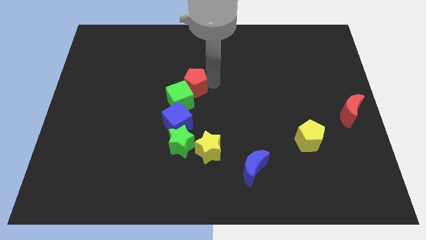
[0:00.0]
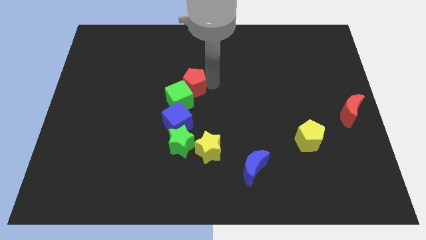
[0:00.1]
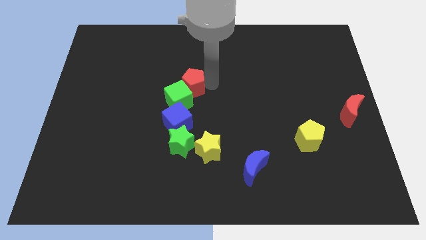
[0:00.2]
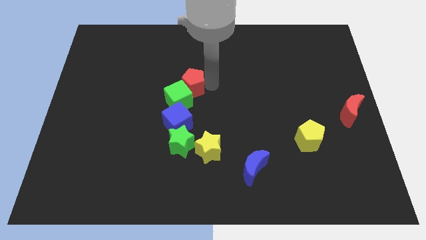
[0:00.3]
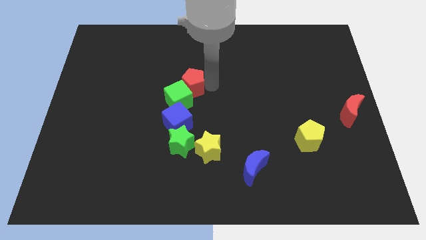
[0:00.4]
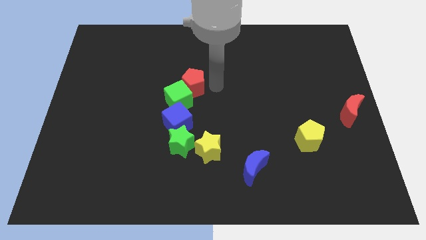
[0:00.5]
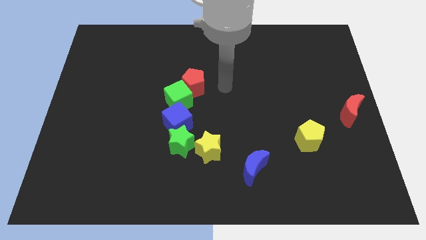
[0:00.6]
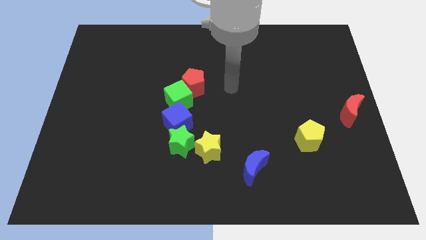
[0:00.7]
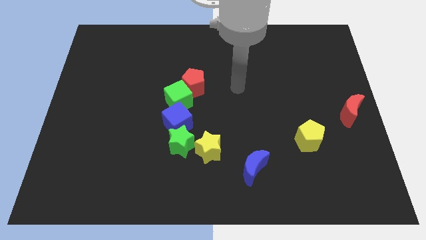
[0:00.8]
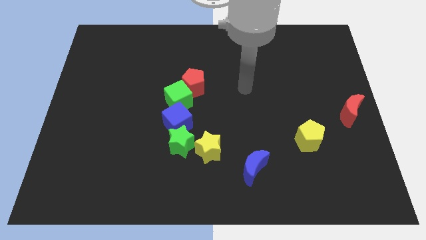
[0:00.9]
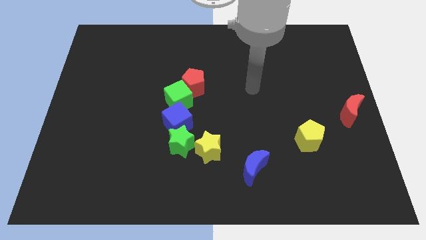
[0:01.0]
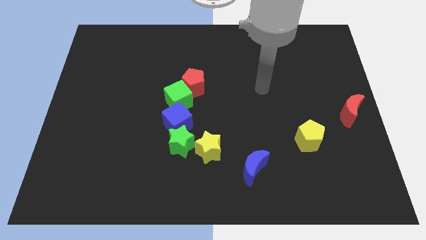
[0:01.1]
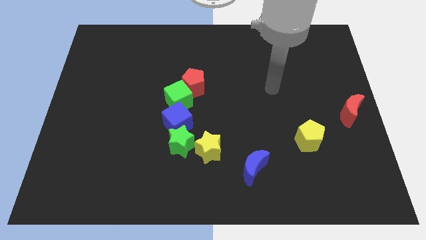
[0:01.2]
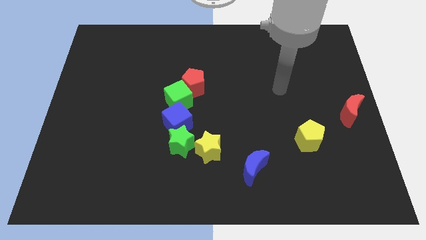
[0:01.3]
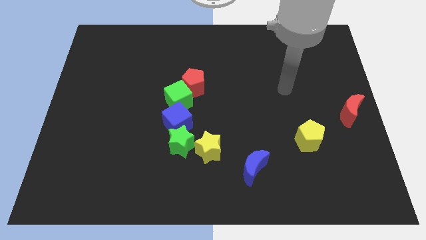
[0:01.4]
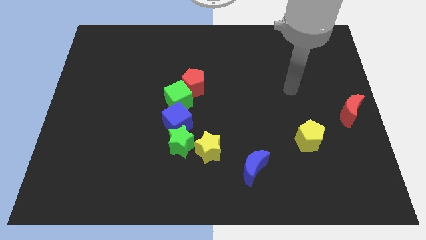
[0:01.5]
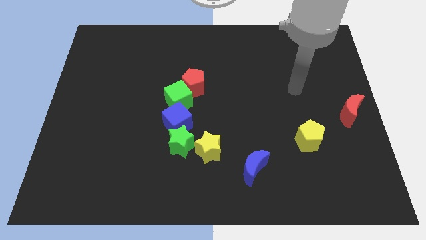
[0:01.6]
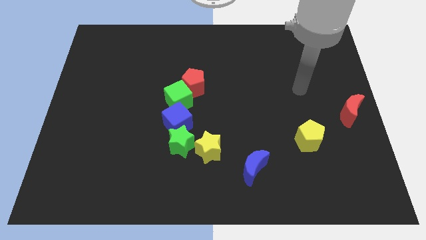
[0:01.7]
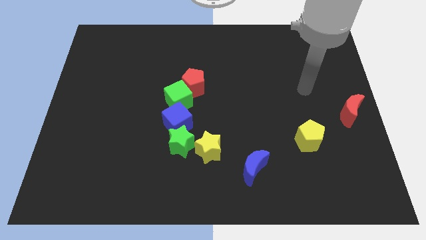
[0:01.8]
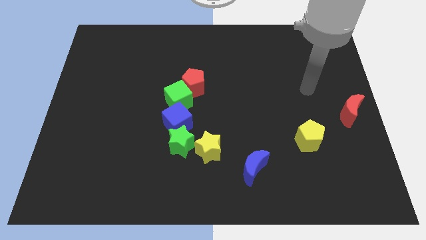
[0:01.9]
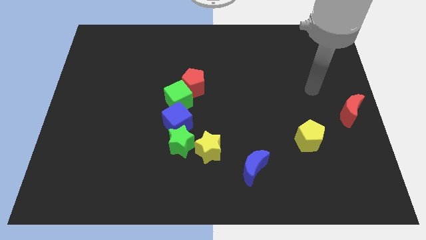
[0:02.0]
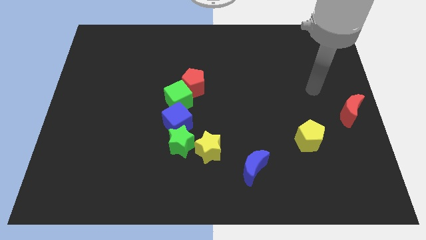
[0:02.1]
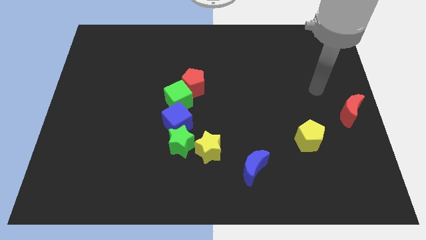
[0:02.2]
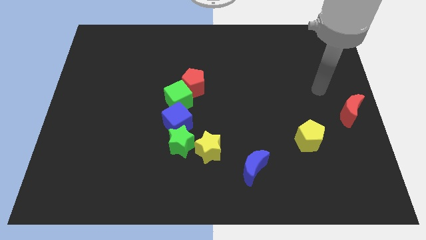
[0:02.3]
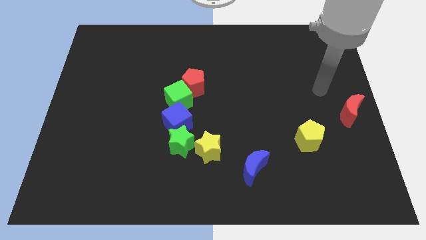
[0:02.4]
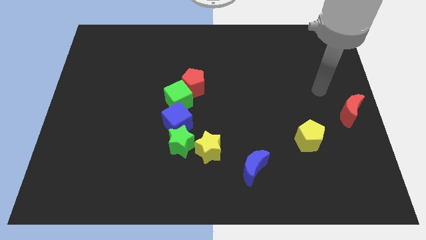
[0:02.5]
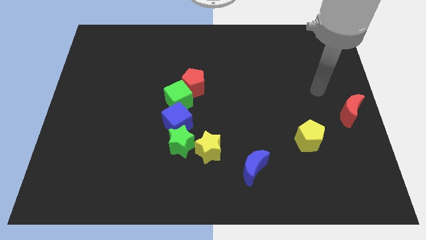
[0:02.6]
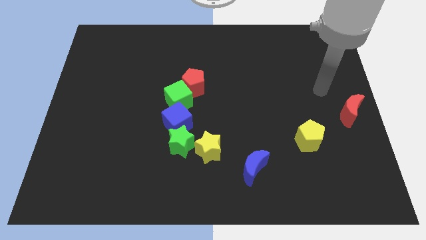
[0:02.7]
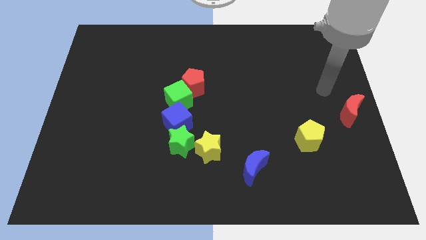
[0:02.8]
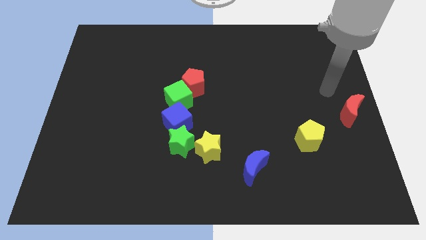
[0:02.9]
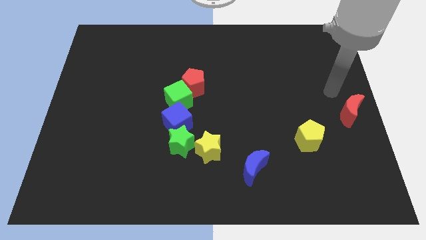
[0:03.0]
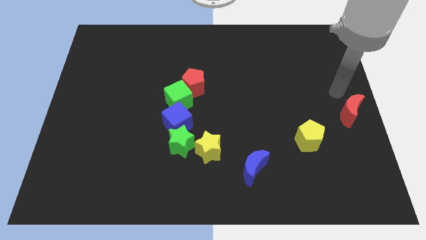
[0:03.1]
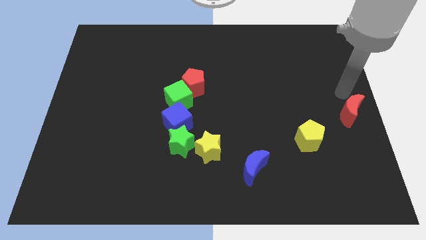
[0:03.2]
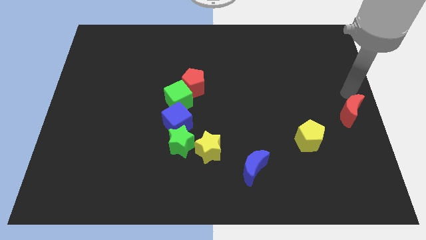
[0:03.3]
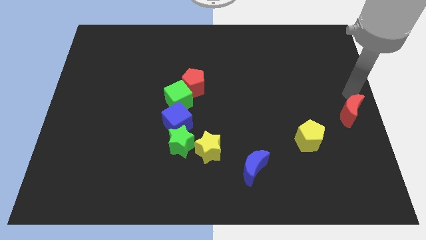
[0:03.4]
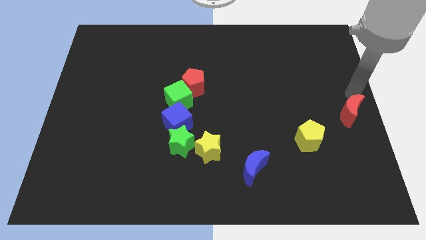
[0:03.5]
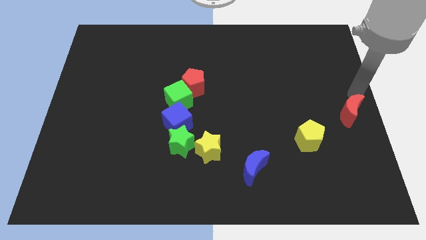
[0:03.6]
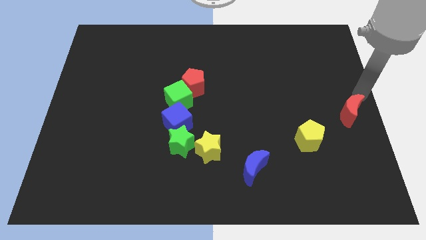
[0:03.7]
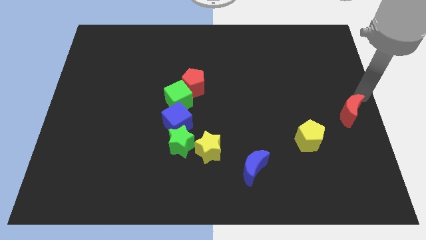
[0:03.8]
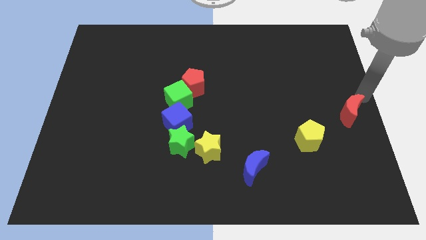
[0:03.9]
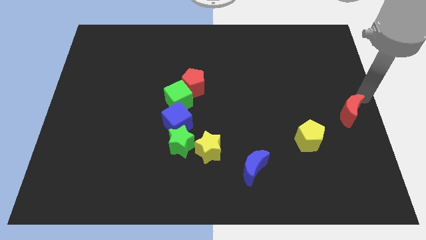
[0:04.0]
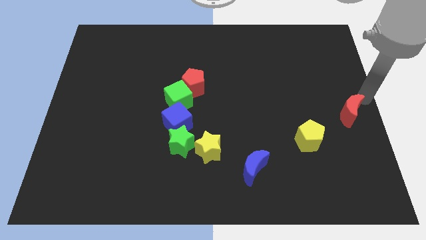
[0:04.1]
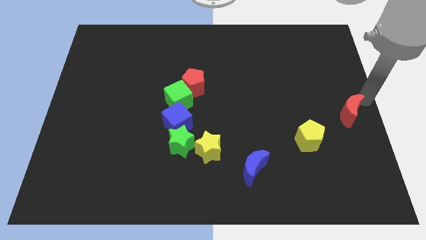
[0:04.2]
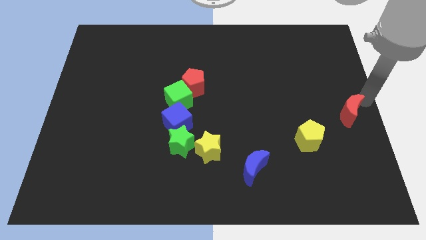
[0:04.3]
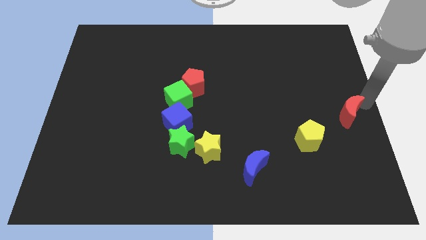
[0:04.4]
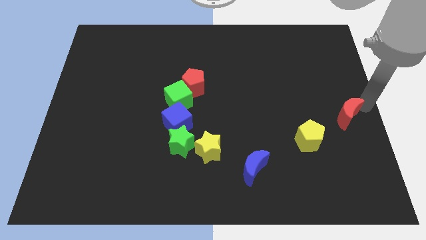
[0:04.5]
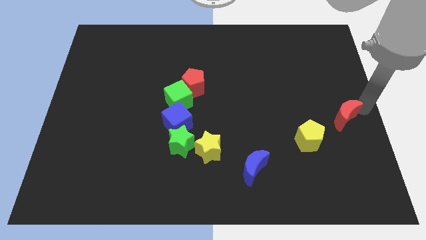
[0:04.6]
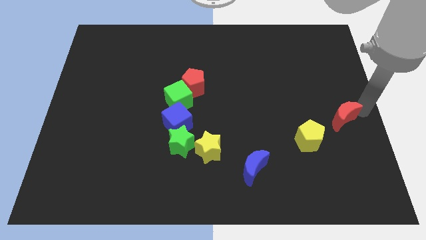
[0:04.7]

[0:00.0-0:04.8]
move your arm to the right center of the board

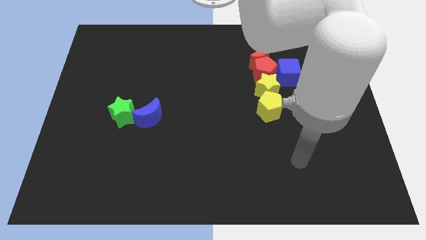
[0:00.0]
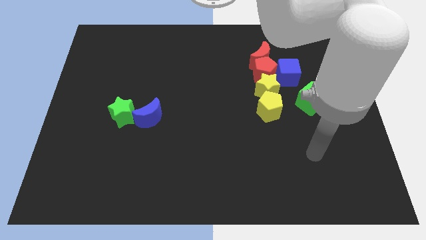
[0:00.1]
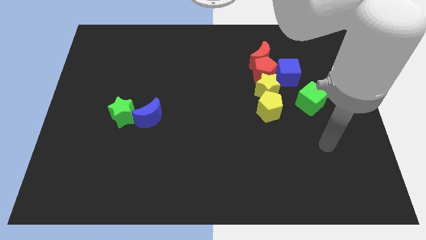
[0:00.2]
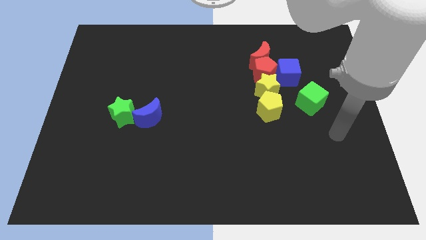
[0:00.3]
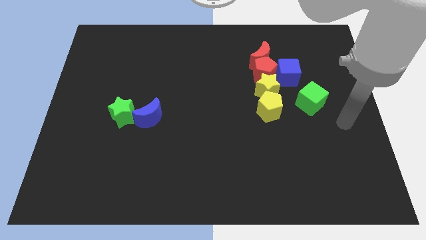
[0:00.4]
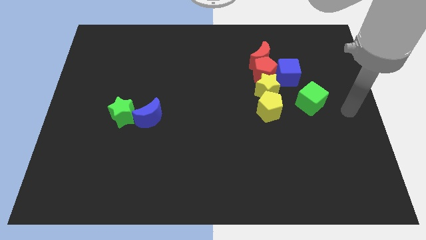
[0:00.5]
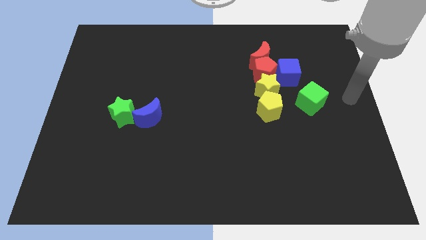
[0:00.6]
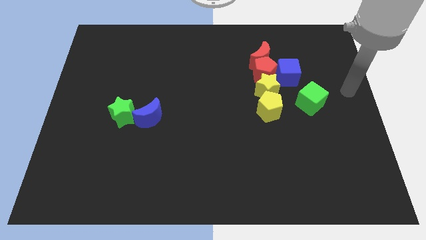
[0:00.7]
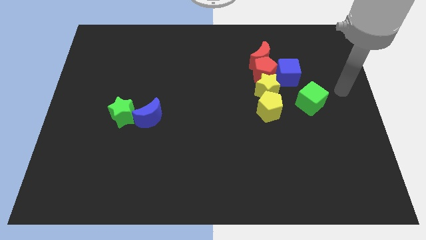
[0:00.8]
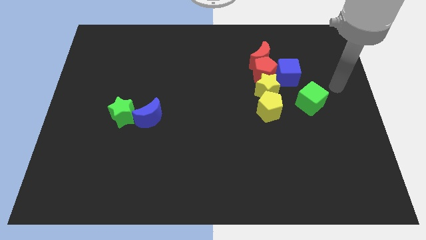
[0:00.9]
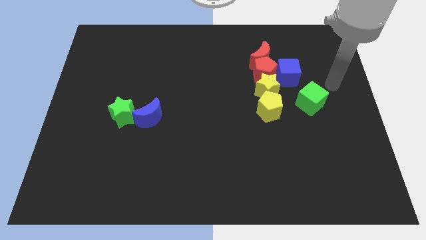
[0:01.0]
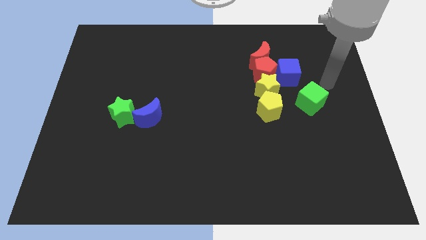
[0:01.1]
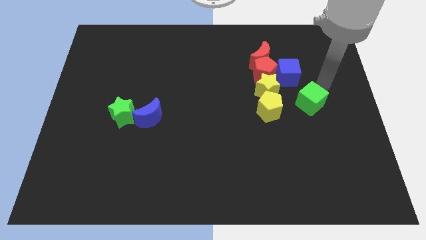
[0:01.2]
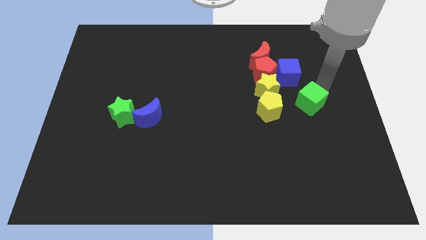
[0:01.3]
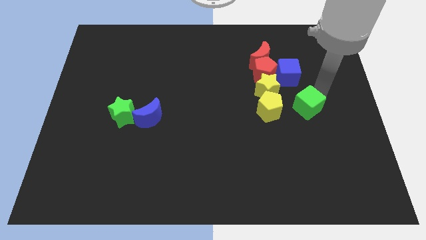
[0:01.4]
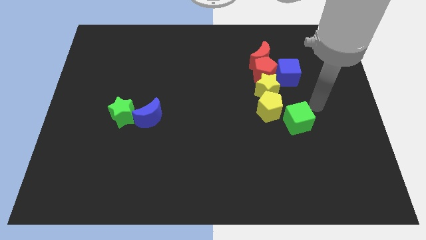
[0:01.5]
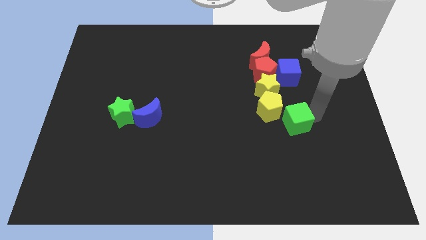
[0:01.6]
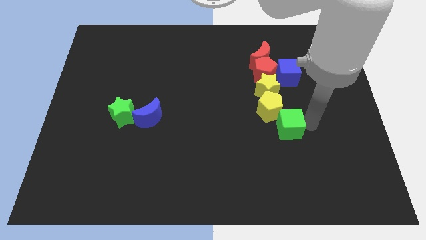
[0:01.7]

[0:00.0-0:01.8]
place the green cube vertically below the blue cube

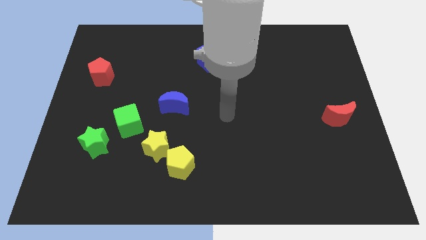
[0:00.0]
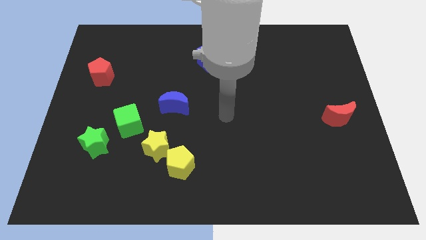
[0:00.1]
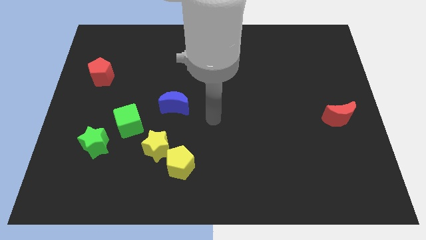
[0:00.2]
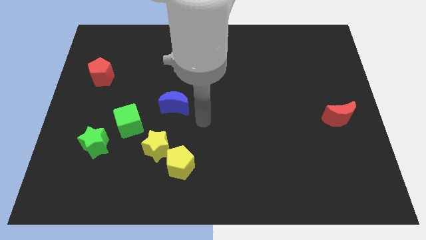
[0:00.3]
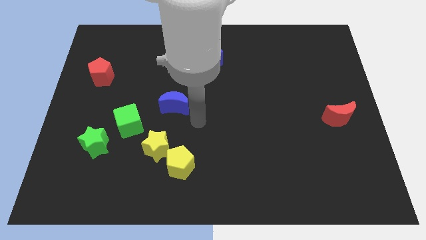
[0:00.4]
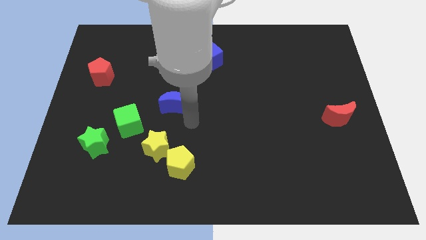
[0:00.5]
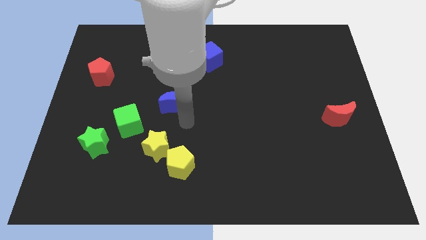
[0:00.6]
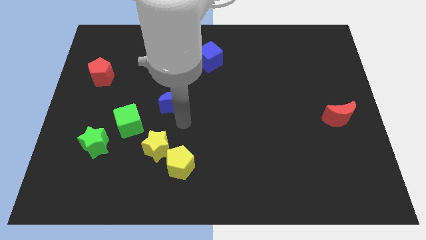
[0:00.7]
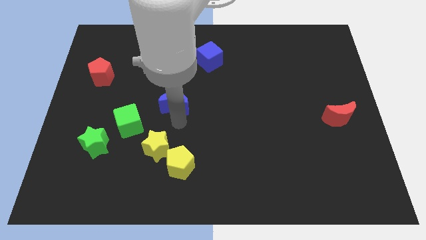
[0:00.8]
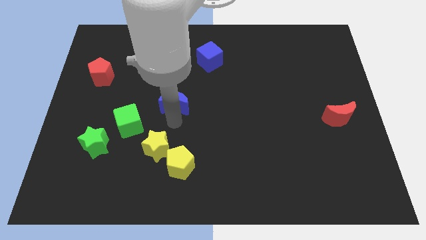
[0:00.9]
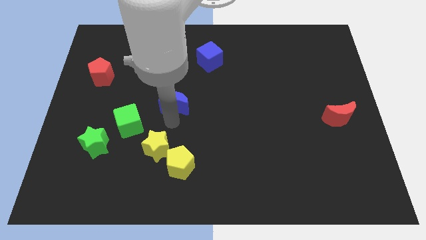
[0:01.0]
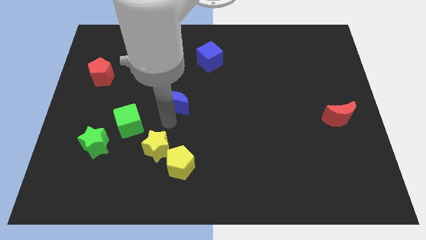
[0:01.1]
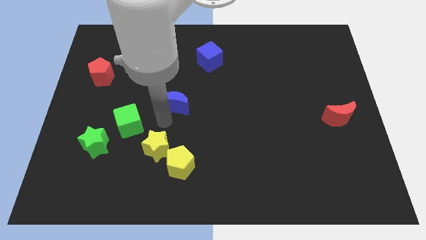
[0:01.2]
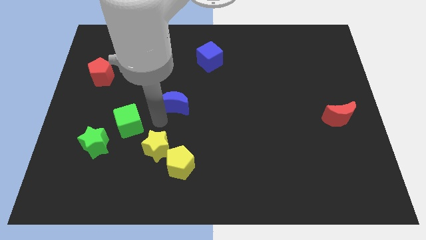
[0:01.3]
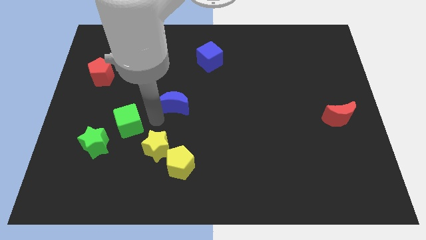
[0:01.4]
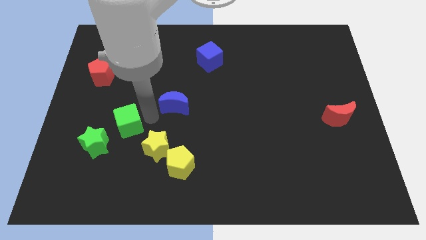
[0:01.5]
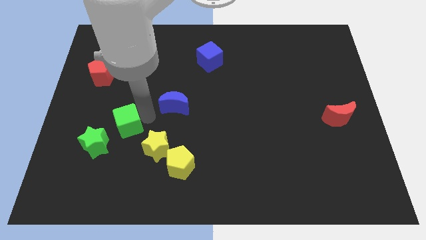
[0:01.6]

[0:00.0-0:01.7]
move your arm to the right side of the green cube

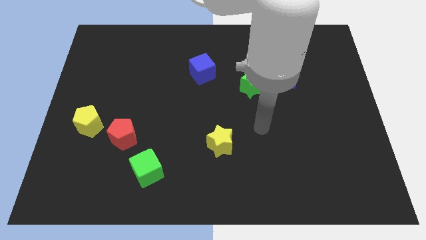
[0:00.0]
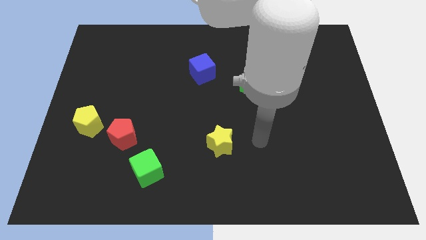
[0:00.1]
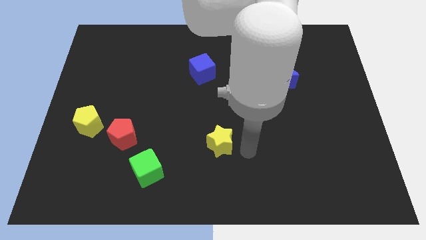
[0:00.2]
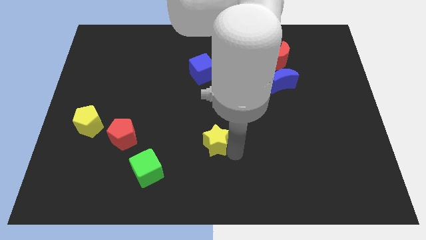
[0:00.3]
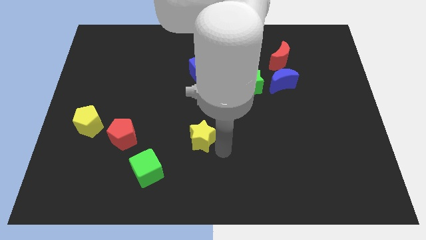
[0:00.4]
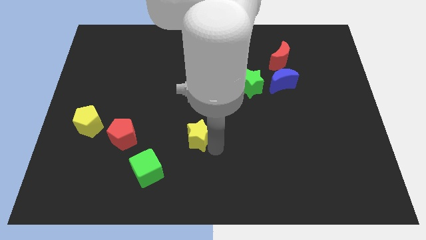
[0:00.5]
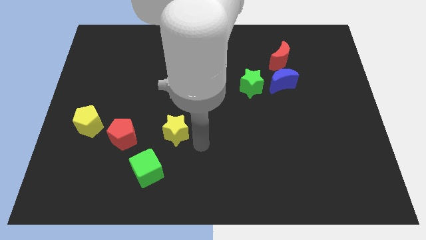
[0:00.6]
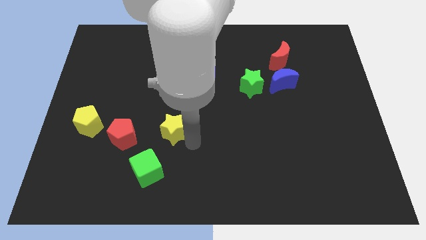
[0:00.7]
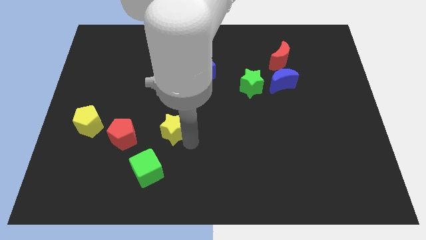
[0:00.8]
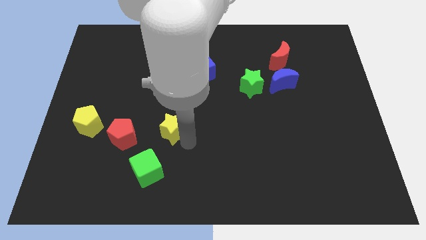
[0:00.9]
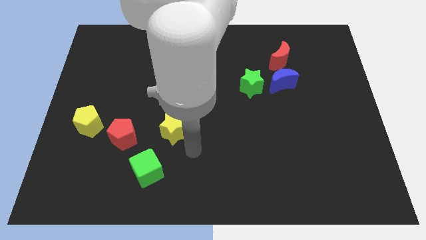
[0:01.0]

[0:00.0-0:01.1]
push the yellow star to the center
